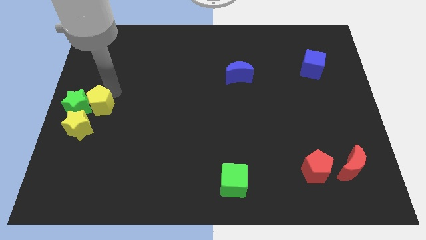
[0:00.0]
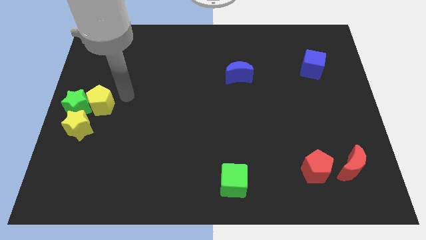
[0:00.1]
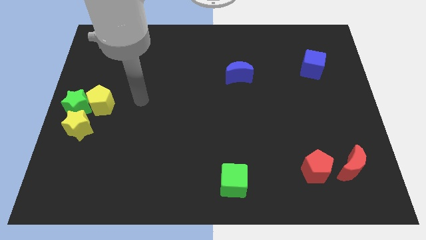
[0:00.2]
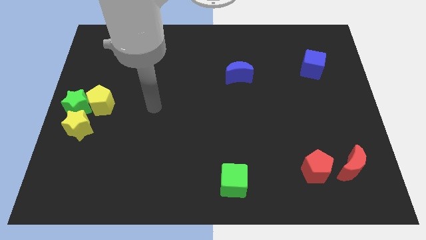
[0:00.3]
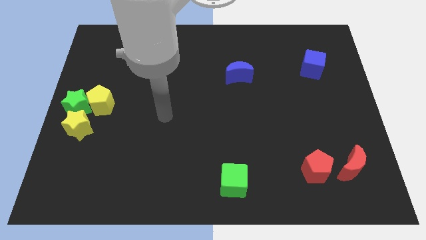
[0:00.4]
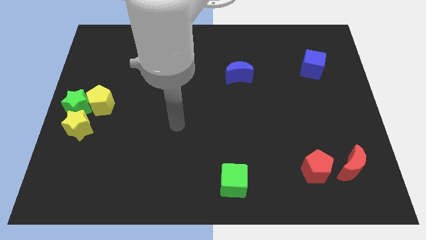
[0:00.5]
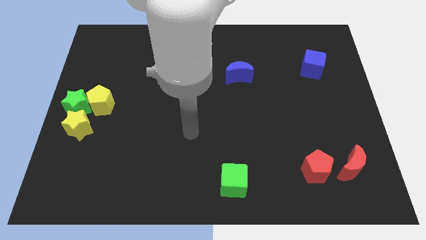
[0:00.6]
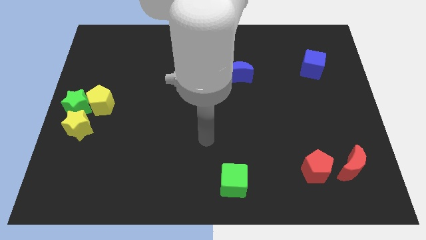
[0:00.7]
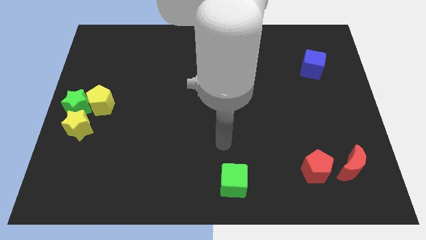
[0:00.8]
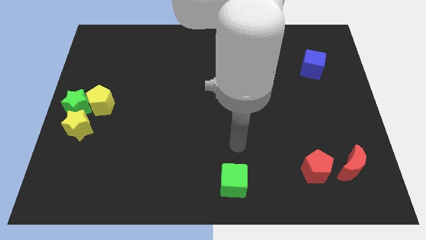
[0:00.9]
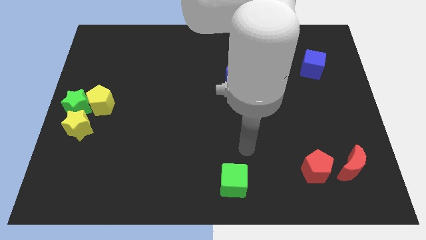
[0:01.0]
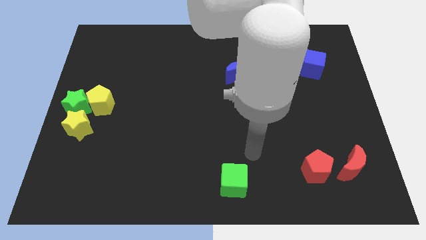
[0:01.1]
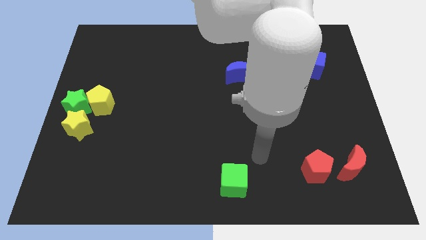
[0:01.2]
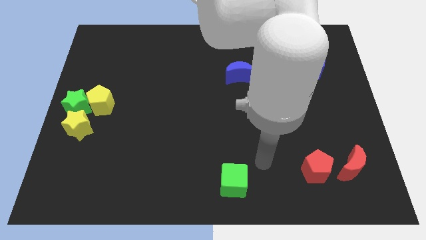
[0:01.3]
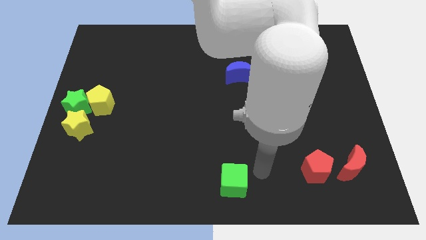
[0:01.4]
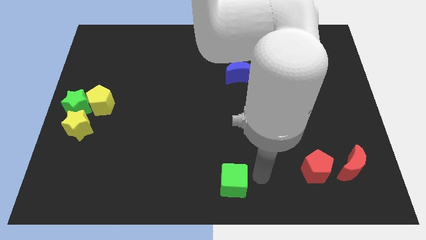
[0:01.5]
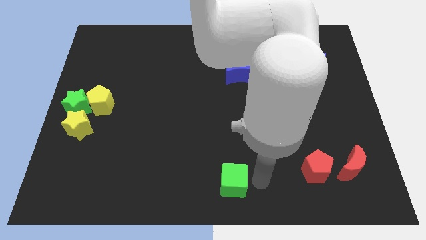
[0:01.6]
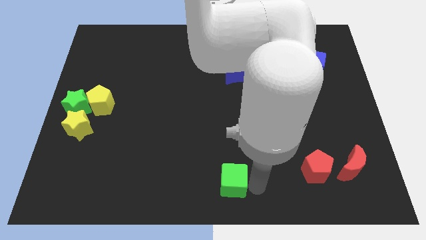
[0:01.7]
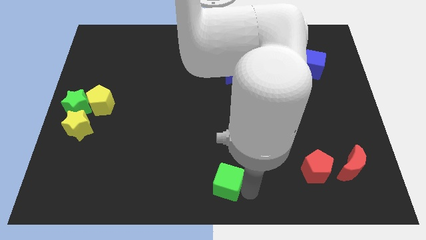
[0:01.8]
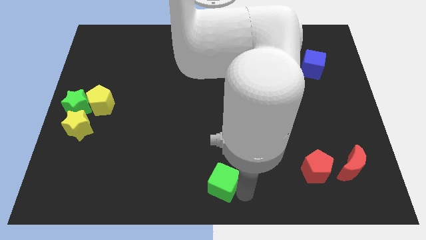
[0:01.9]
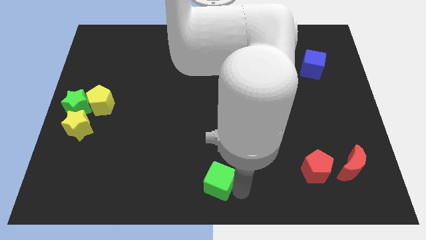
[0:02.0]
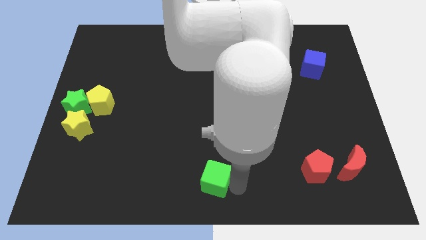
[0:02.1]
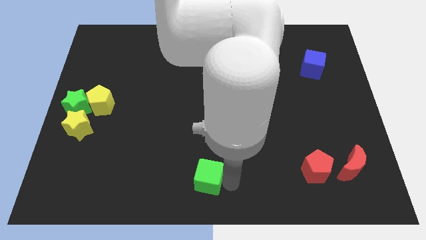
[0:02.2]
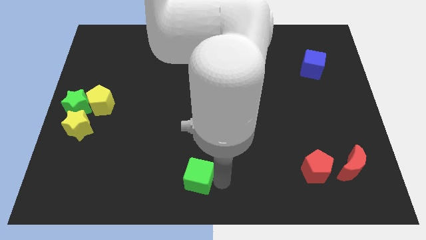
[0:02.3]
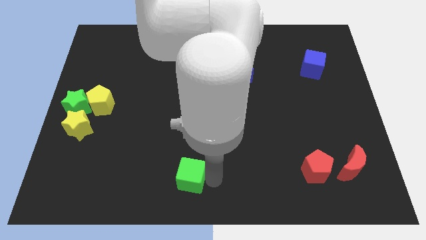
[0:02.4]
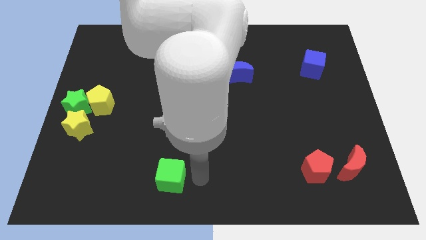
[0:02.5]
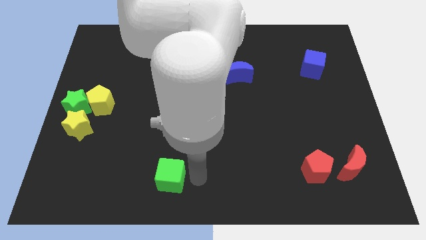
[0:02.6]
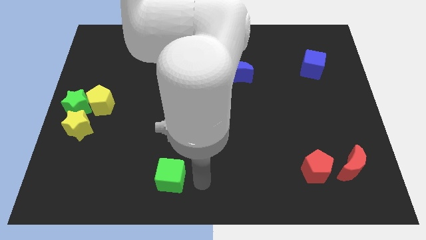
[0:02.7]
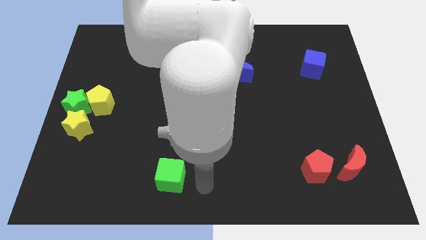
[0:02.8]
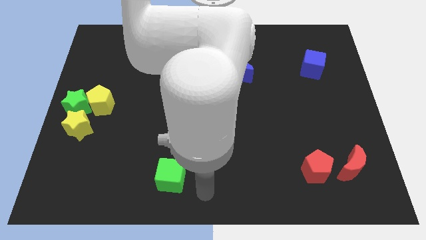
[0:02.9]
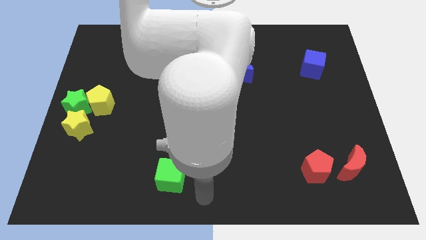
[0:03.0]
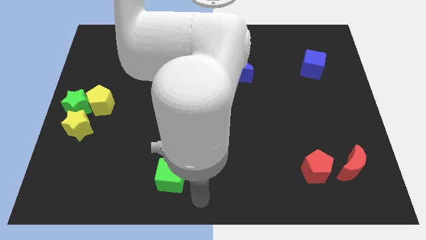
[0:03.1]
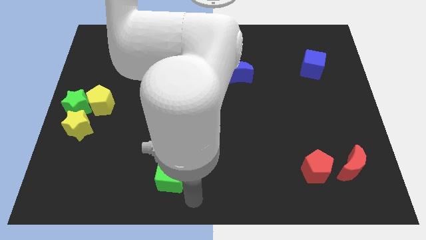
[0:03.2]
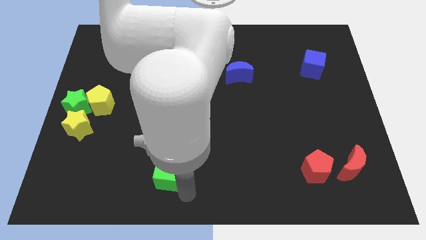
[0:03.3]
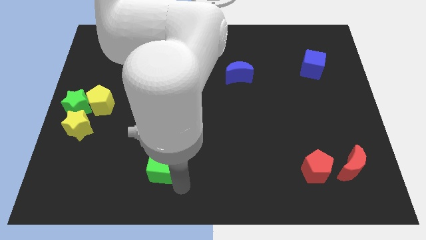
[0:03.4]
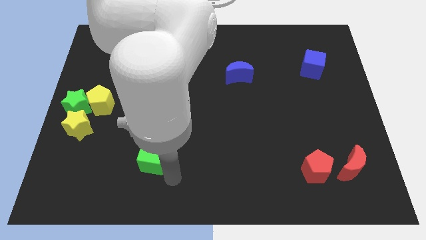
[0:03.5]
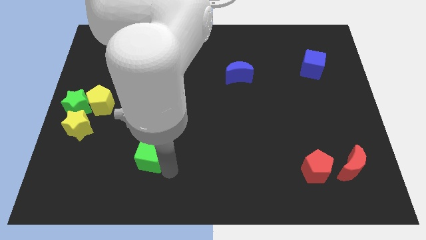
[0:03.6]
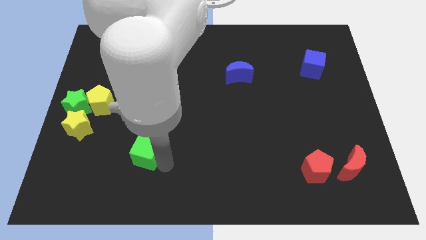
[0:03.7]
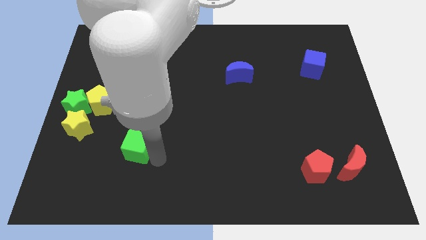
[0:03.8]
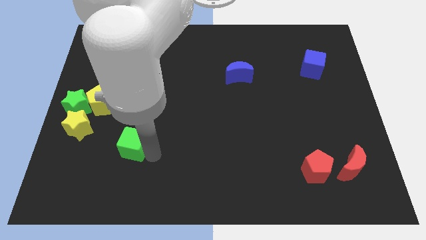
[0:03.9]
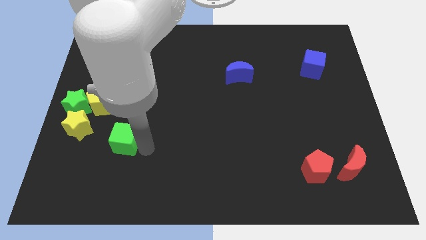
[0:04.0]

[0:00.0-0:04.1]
move the green cube to the bottom right of the yellow pentagon

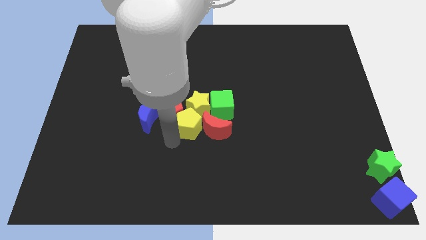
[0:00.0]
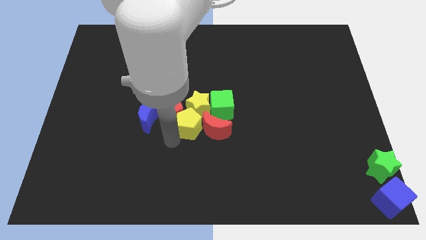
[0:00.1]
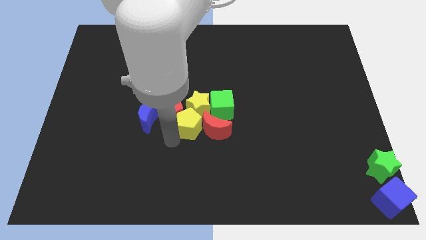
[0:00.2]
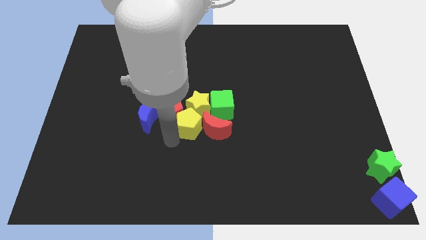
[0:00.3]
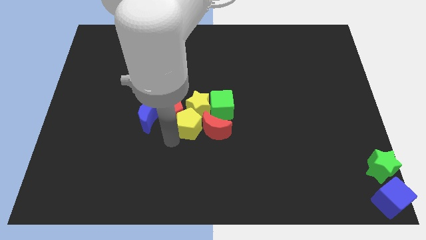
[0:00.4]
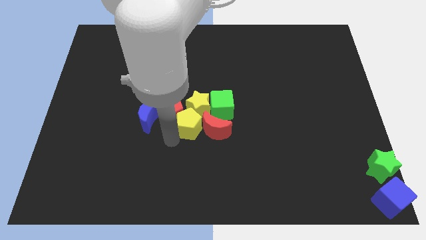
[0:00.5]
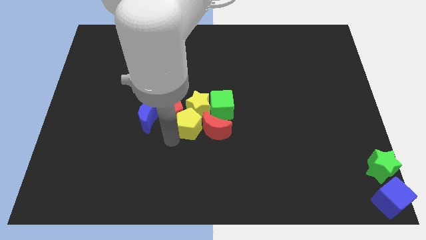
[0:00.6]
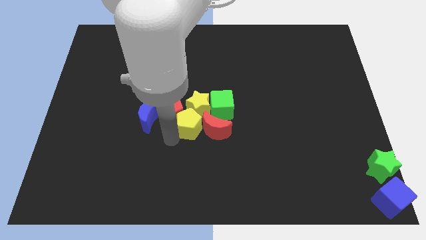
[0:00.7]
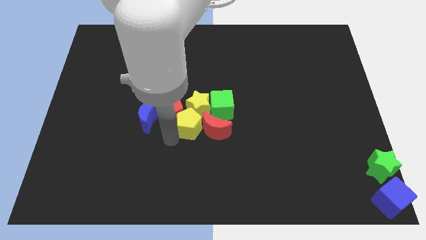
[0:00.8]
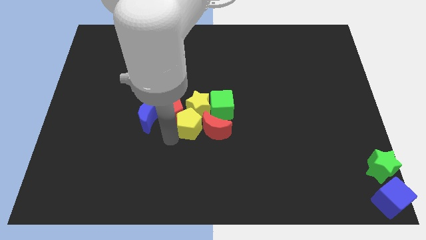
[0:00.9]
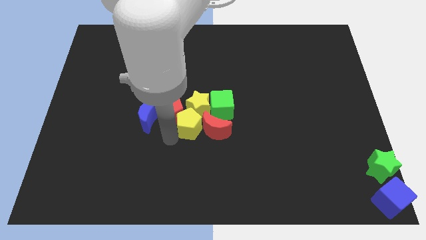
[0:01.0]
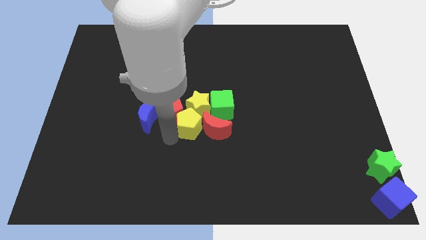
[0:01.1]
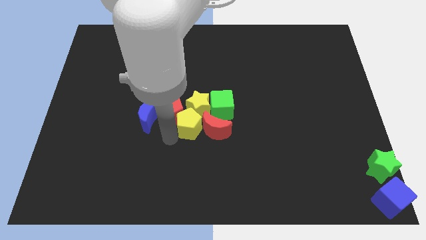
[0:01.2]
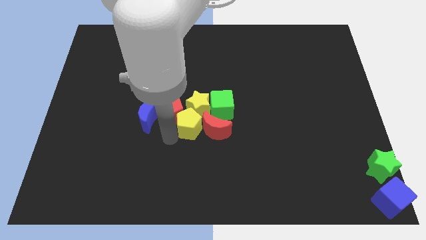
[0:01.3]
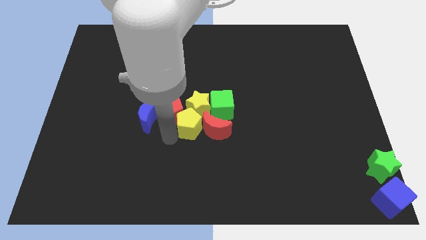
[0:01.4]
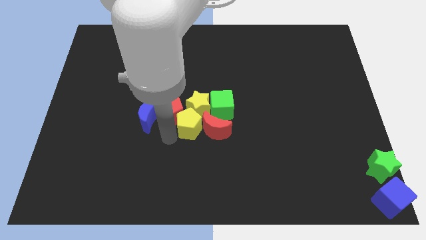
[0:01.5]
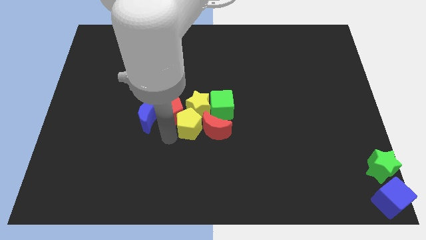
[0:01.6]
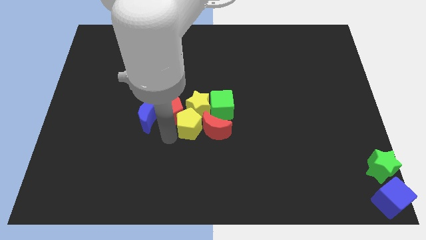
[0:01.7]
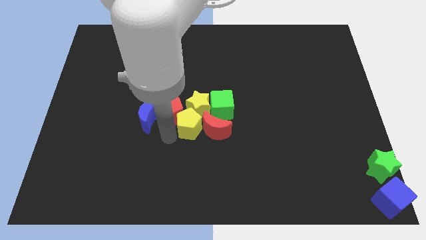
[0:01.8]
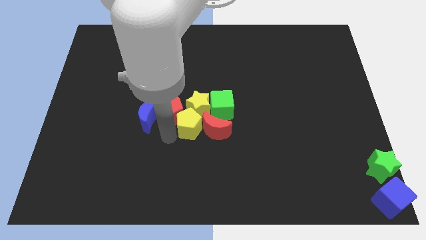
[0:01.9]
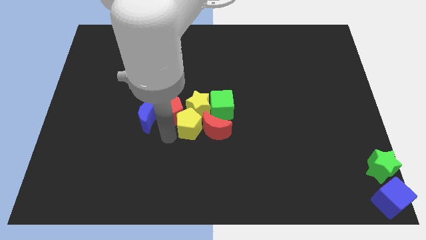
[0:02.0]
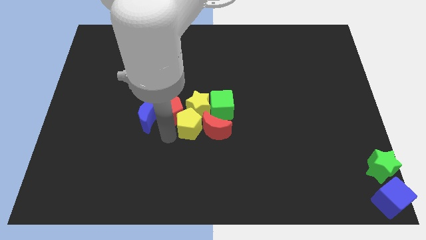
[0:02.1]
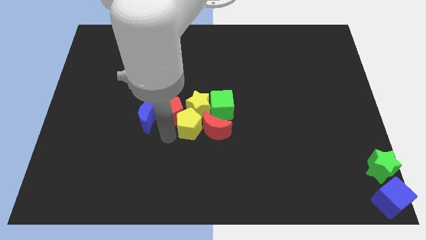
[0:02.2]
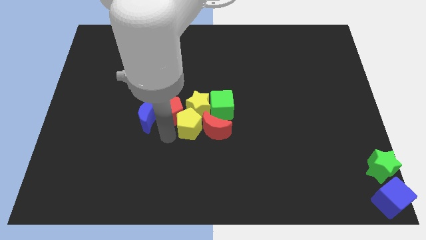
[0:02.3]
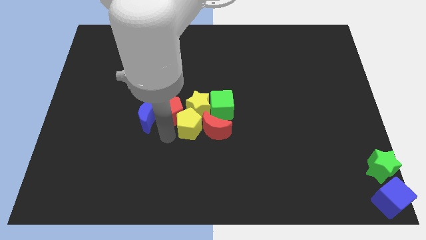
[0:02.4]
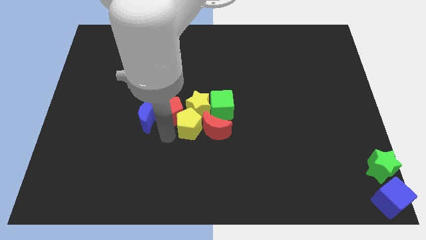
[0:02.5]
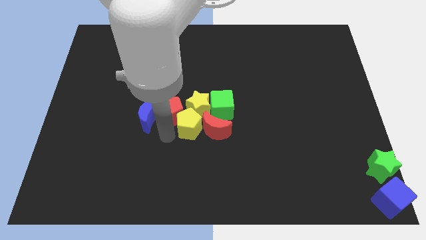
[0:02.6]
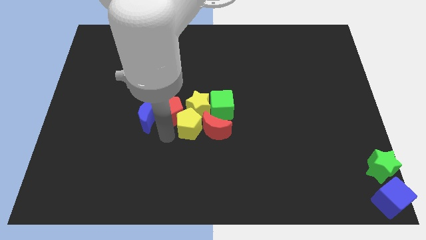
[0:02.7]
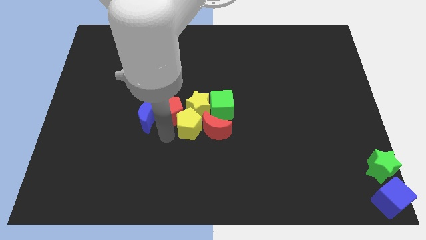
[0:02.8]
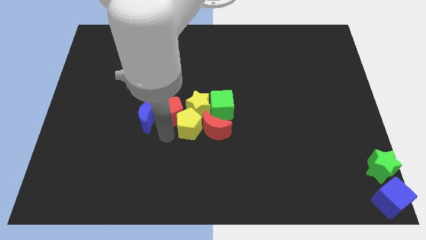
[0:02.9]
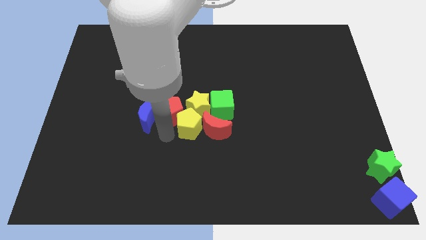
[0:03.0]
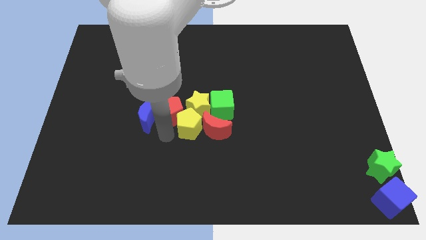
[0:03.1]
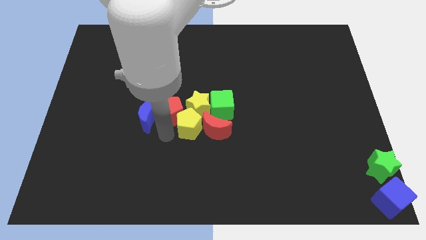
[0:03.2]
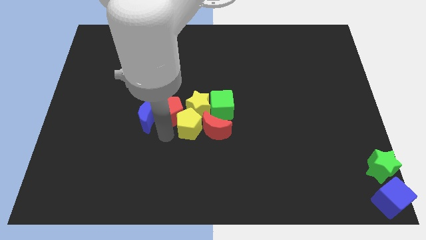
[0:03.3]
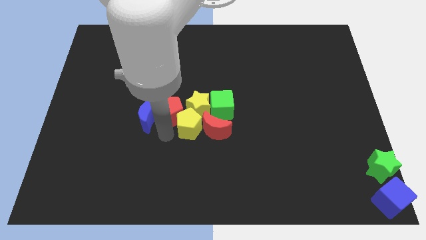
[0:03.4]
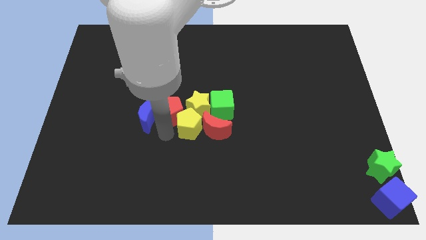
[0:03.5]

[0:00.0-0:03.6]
touch the bottom of the red pentagon

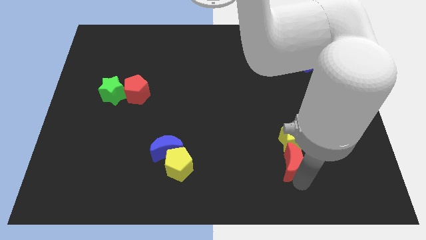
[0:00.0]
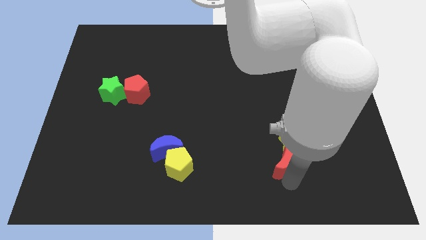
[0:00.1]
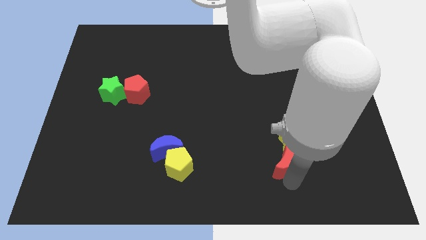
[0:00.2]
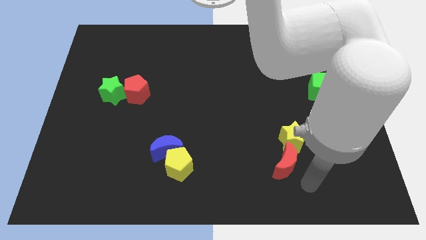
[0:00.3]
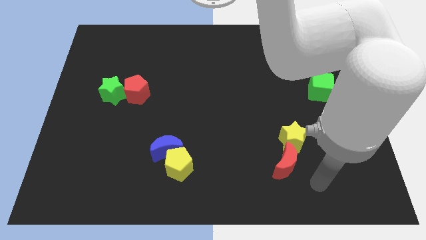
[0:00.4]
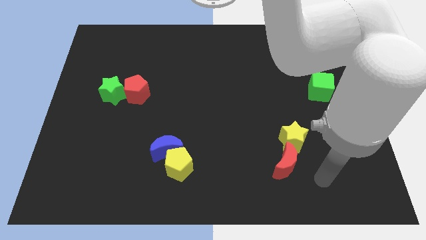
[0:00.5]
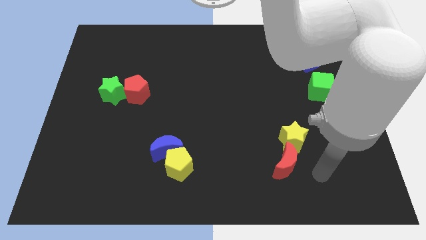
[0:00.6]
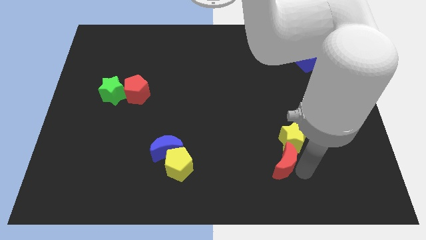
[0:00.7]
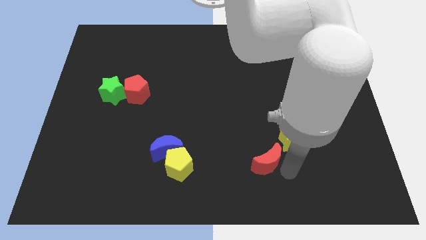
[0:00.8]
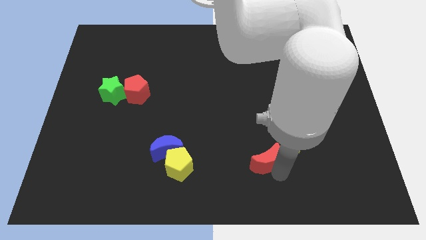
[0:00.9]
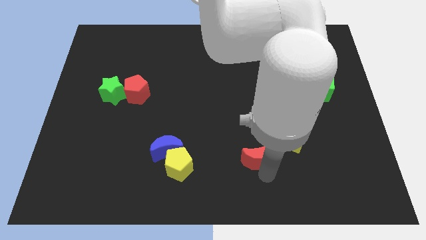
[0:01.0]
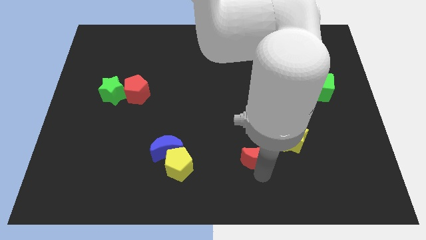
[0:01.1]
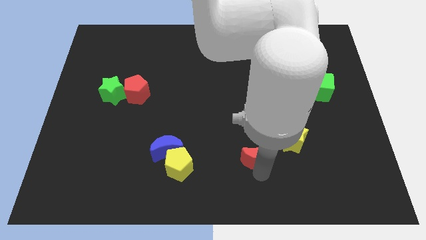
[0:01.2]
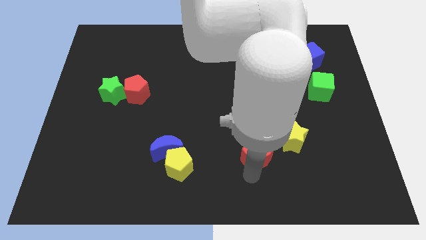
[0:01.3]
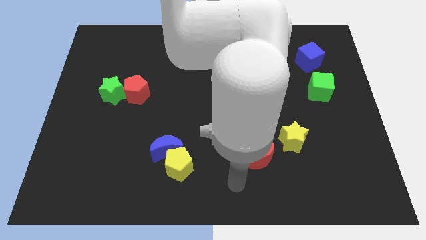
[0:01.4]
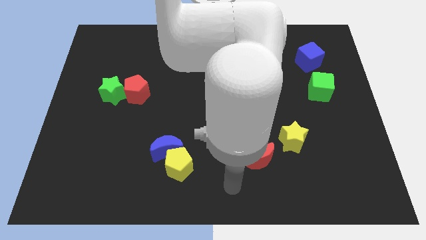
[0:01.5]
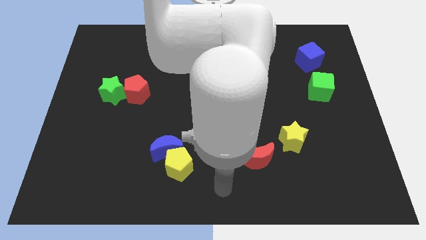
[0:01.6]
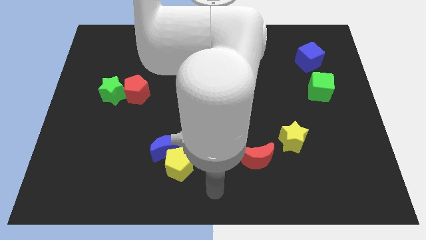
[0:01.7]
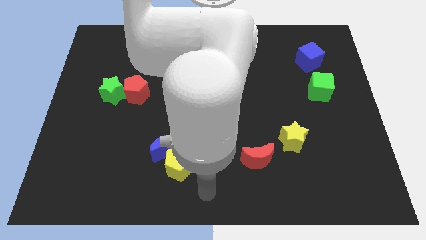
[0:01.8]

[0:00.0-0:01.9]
separate the red moon from the yellow star
